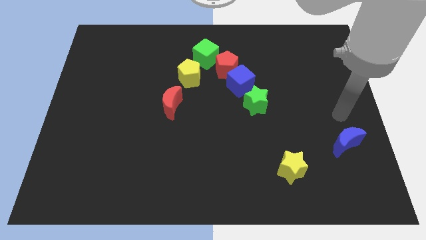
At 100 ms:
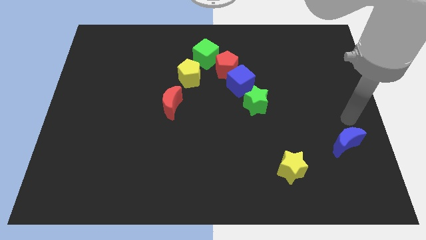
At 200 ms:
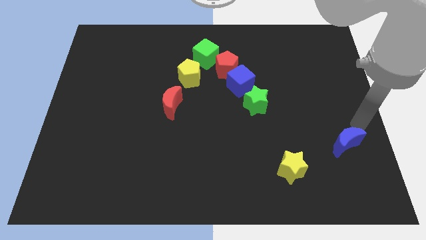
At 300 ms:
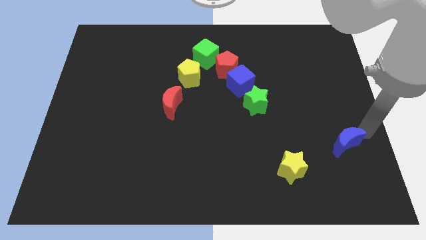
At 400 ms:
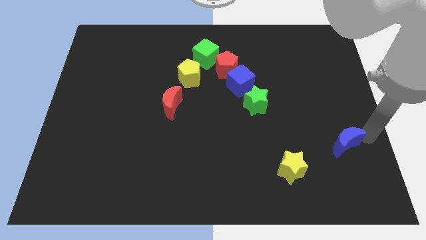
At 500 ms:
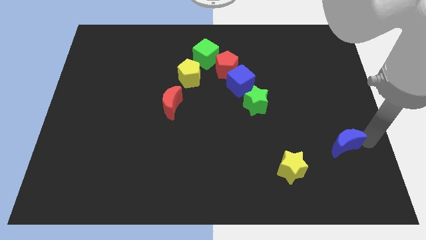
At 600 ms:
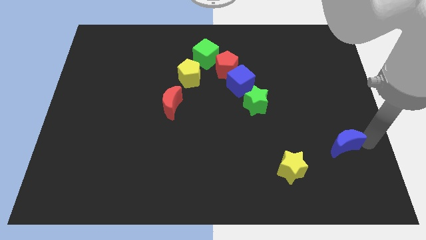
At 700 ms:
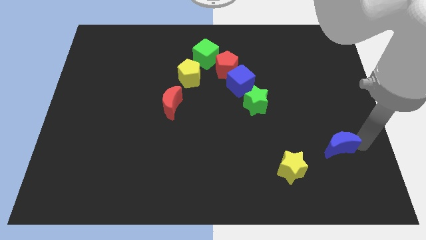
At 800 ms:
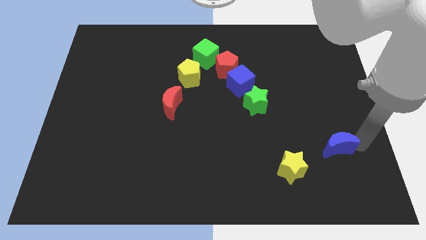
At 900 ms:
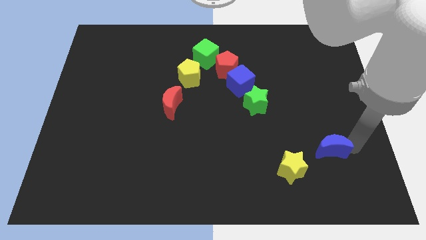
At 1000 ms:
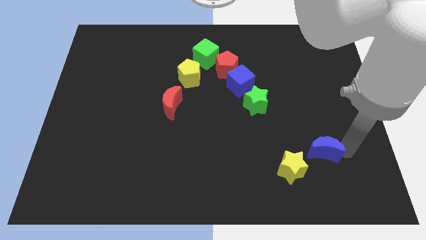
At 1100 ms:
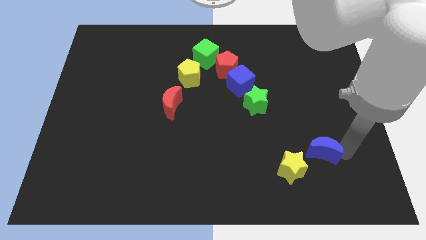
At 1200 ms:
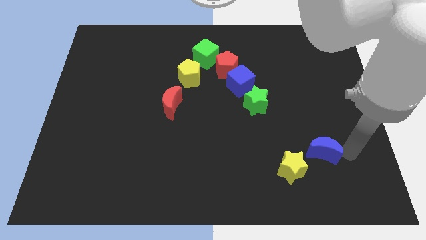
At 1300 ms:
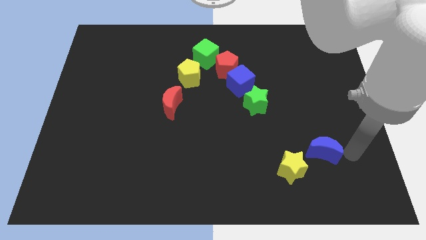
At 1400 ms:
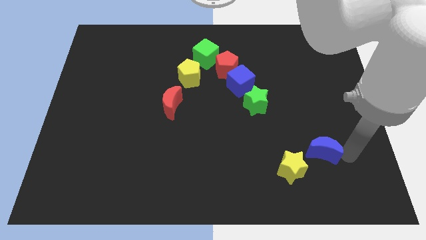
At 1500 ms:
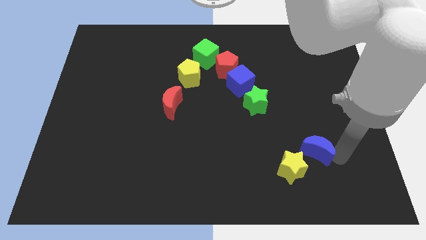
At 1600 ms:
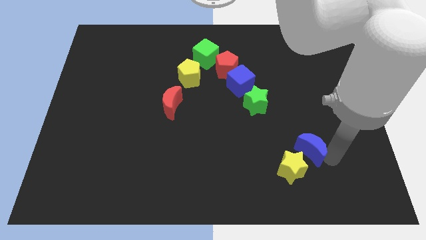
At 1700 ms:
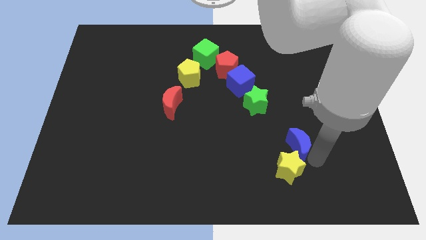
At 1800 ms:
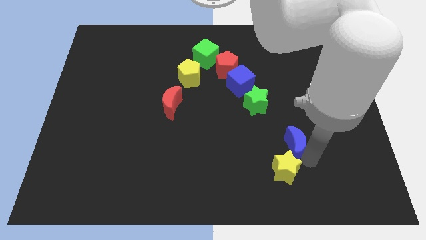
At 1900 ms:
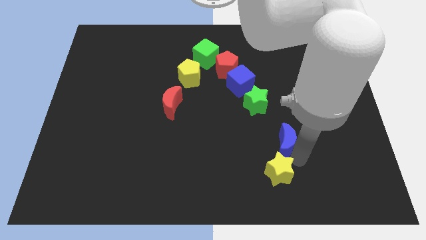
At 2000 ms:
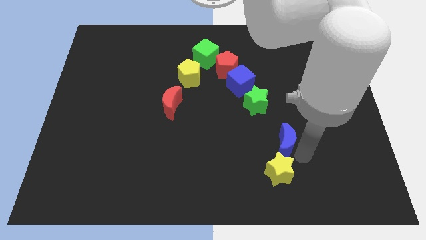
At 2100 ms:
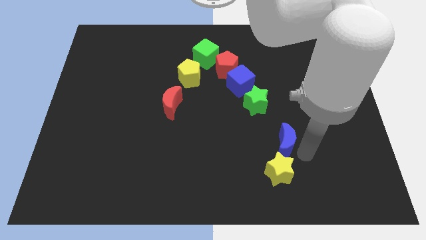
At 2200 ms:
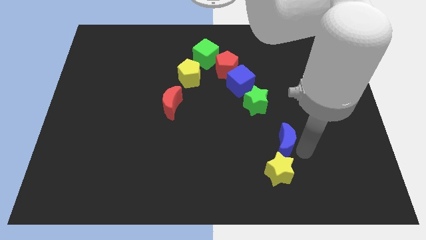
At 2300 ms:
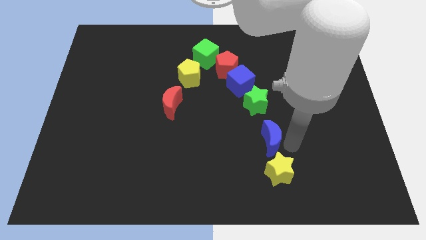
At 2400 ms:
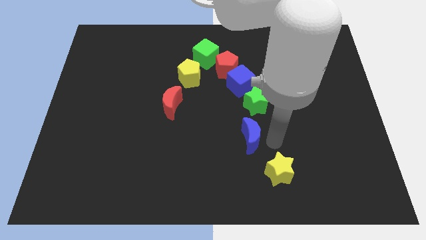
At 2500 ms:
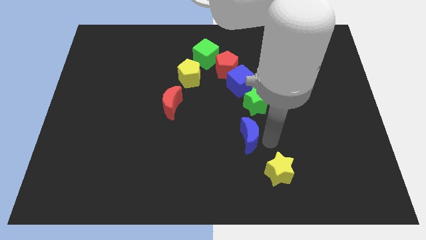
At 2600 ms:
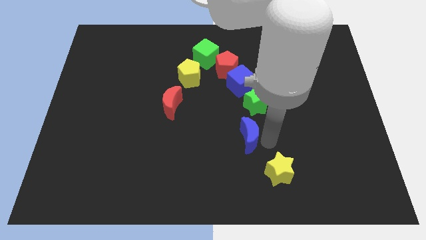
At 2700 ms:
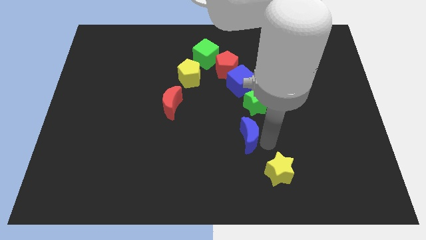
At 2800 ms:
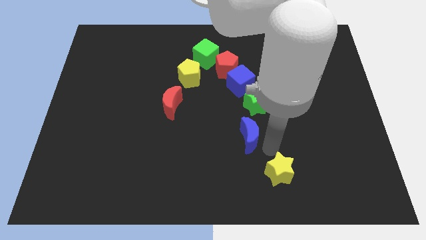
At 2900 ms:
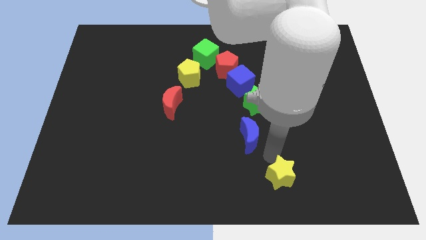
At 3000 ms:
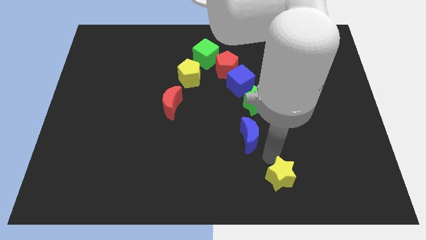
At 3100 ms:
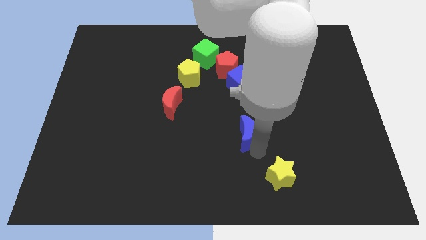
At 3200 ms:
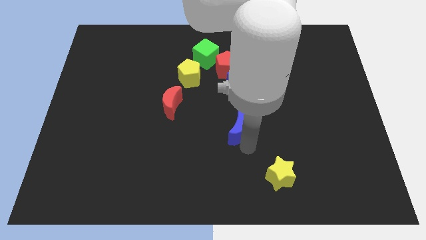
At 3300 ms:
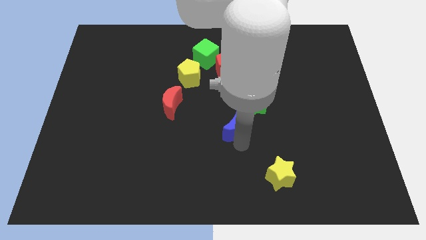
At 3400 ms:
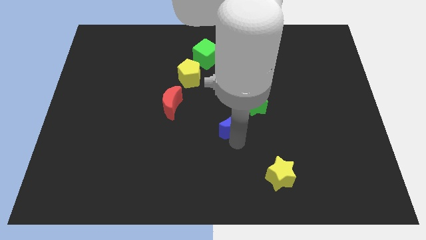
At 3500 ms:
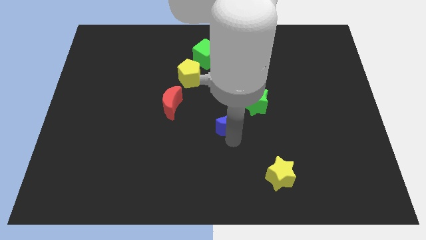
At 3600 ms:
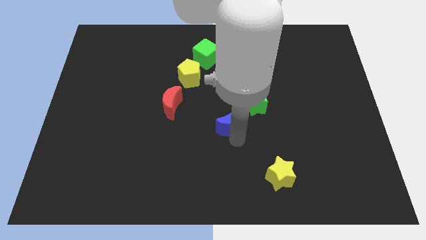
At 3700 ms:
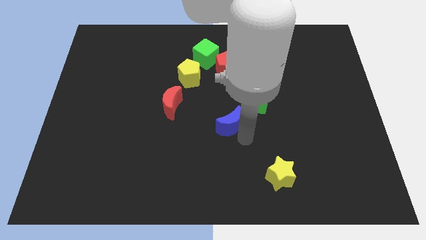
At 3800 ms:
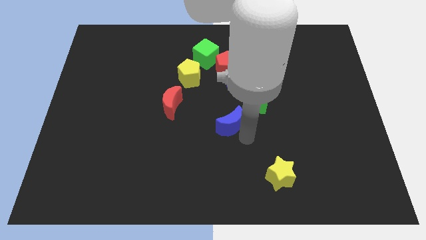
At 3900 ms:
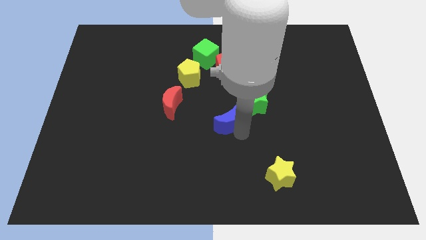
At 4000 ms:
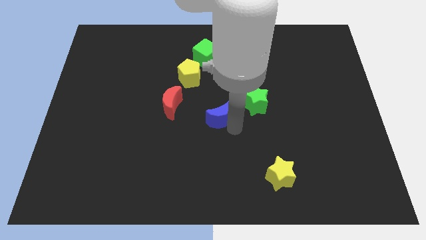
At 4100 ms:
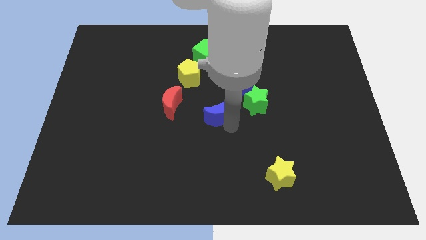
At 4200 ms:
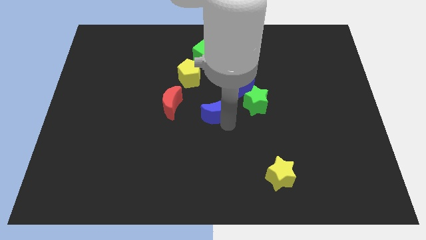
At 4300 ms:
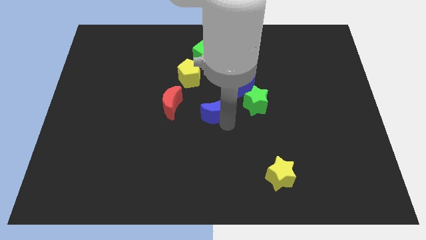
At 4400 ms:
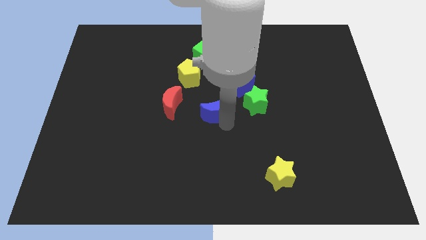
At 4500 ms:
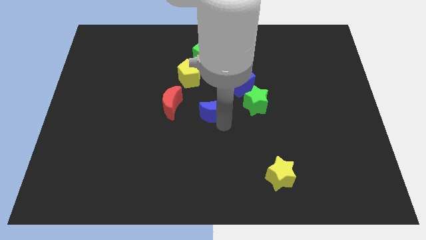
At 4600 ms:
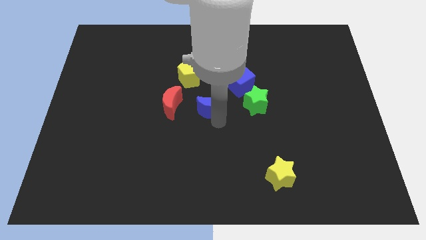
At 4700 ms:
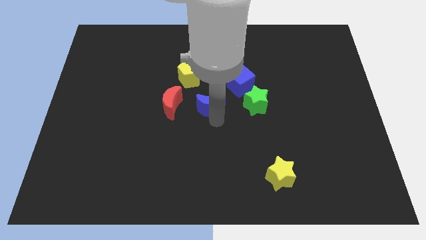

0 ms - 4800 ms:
place the blue moon in between red moon and green star

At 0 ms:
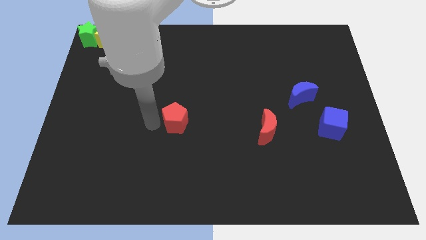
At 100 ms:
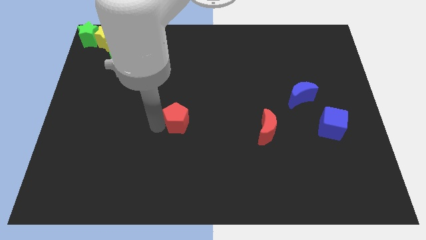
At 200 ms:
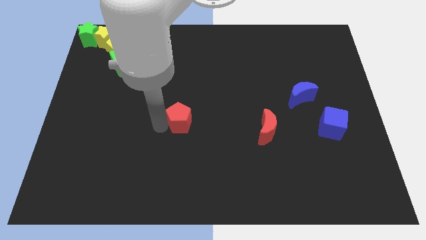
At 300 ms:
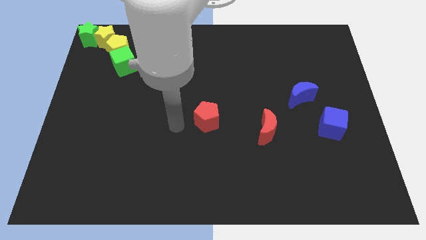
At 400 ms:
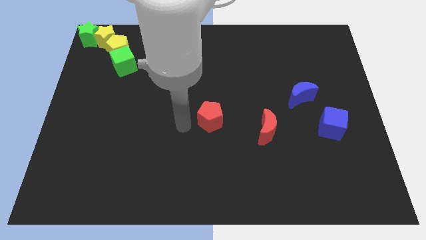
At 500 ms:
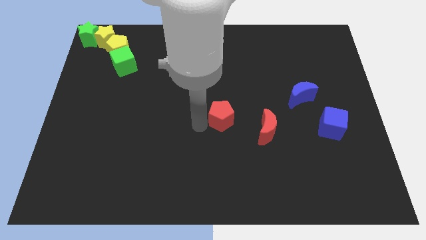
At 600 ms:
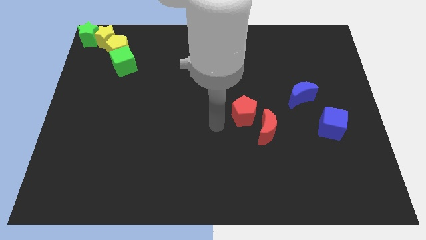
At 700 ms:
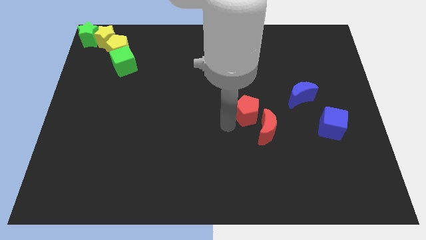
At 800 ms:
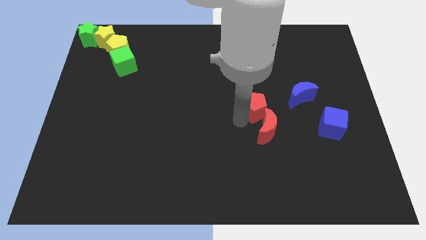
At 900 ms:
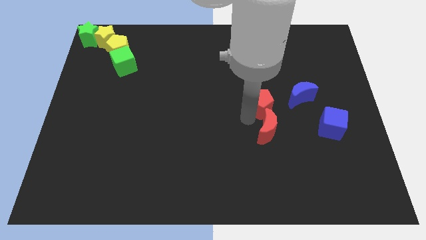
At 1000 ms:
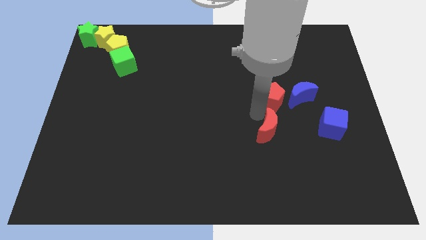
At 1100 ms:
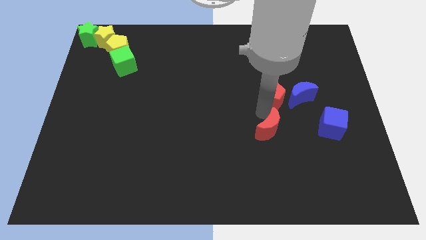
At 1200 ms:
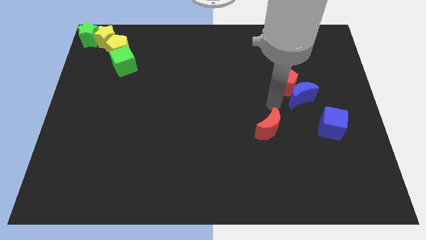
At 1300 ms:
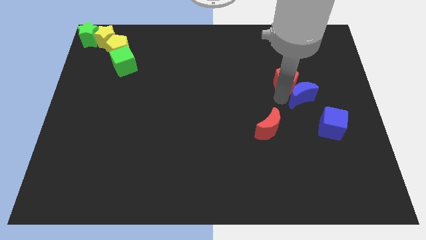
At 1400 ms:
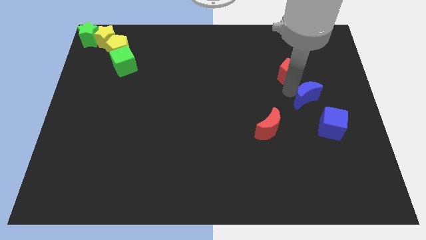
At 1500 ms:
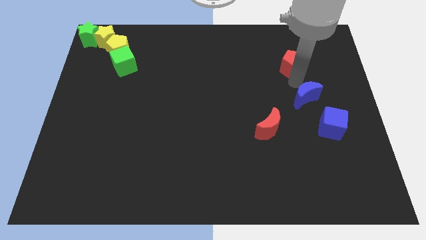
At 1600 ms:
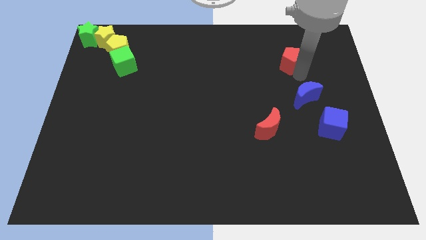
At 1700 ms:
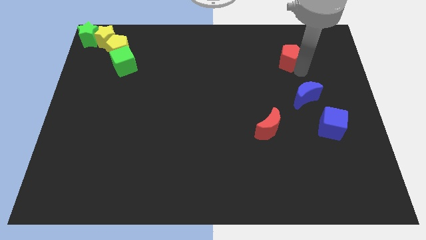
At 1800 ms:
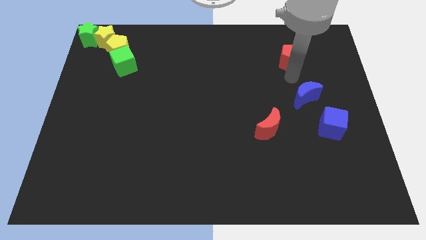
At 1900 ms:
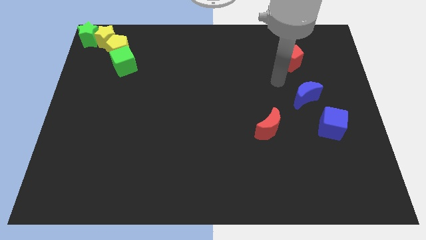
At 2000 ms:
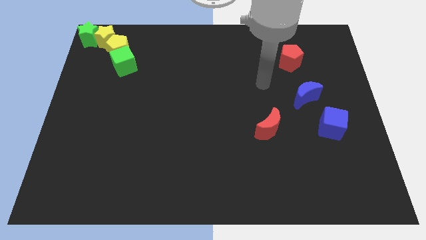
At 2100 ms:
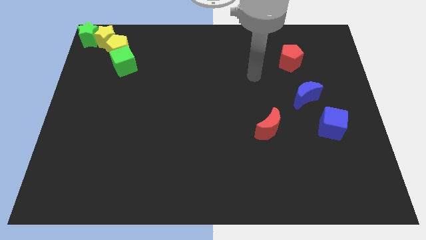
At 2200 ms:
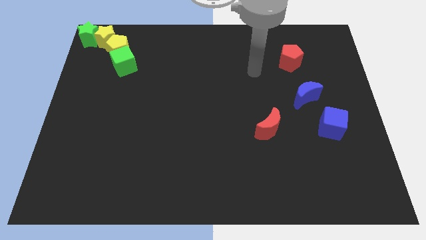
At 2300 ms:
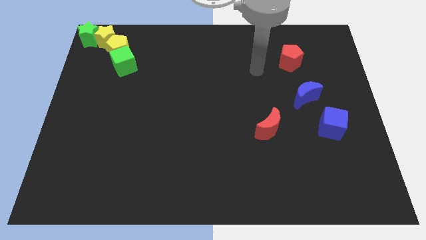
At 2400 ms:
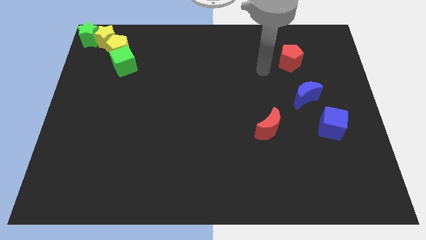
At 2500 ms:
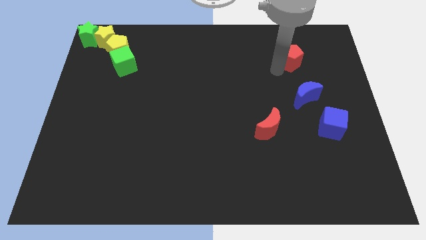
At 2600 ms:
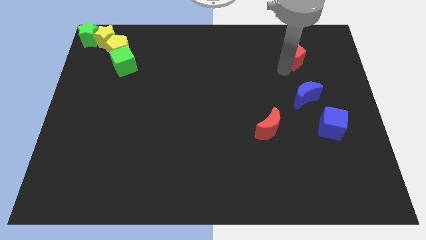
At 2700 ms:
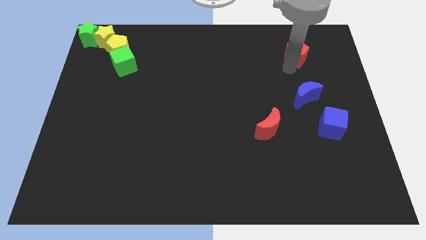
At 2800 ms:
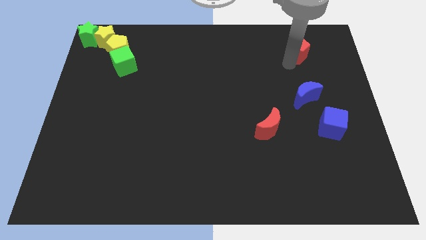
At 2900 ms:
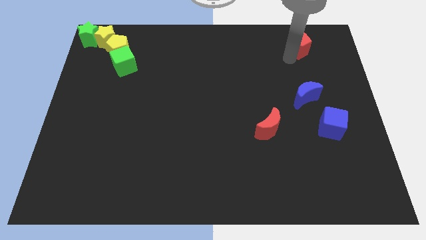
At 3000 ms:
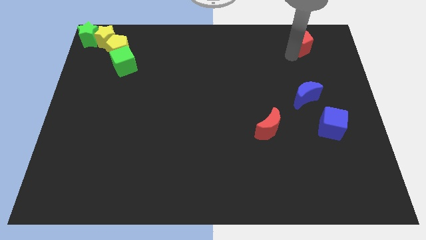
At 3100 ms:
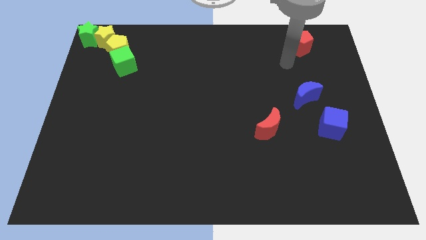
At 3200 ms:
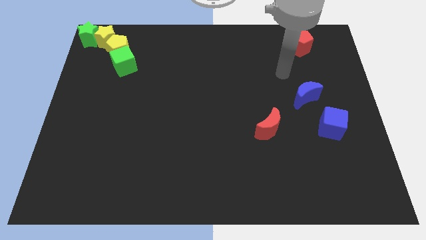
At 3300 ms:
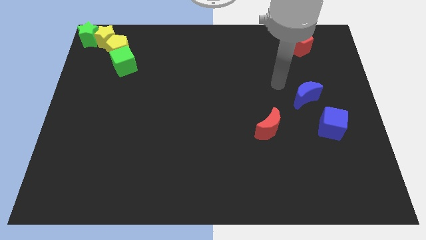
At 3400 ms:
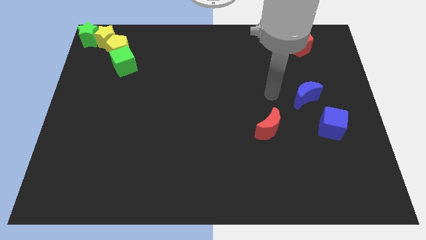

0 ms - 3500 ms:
push the red pentagon towards the top right corner of the board

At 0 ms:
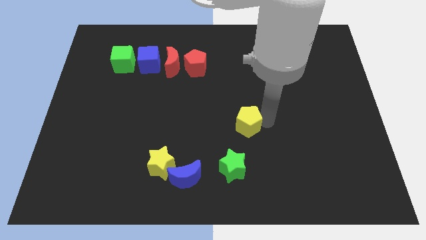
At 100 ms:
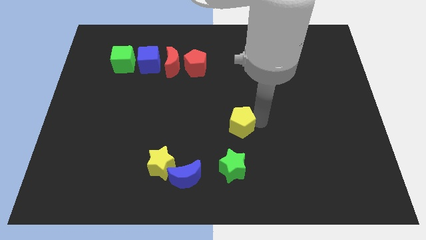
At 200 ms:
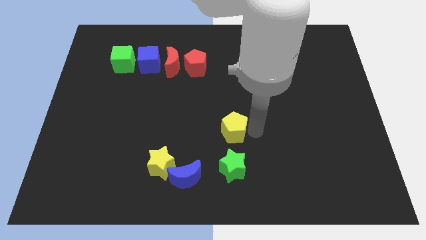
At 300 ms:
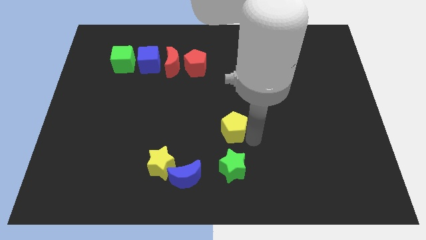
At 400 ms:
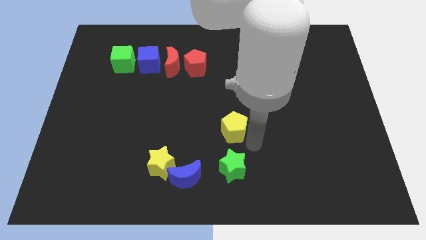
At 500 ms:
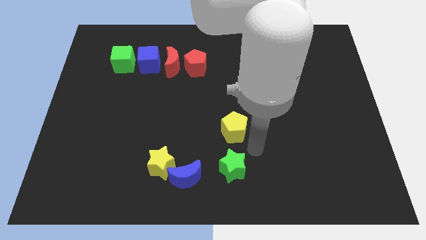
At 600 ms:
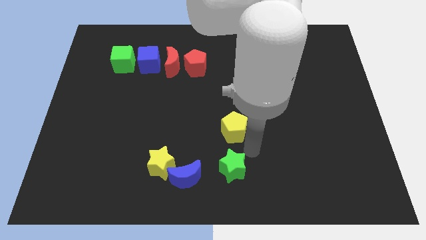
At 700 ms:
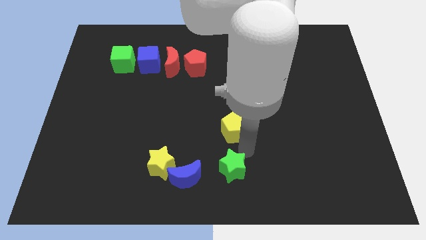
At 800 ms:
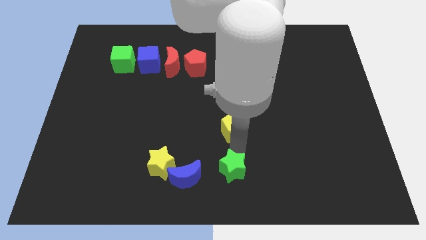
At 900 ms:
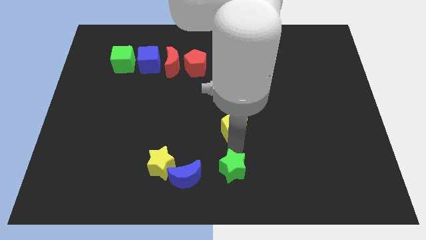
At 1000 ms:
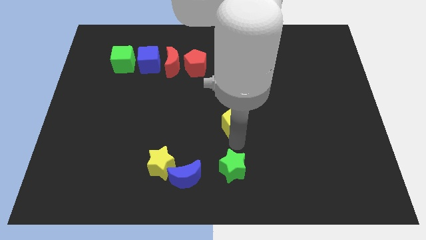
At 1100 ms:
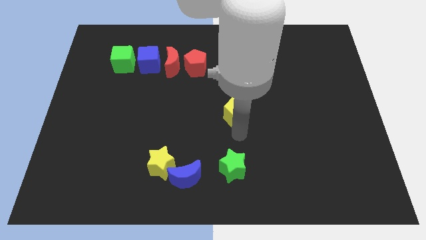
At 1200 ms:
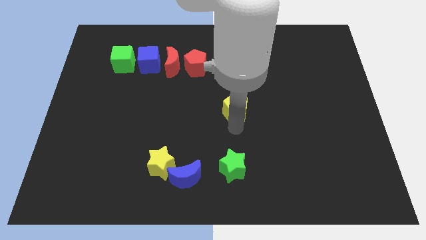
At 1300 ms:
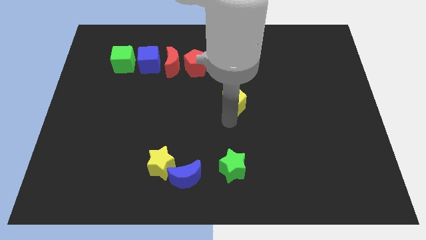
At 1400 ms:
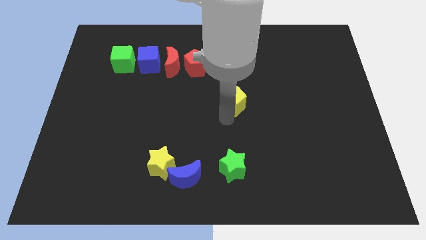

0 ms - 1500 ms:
place yellow pentagon to the center of the board
